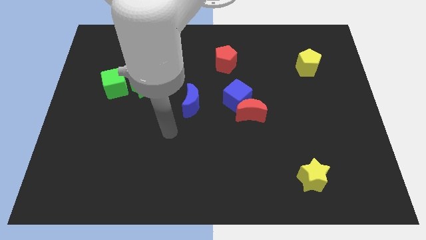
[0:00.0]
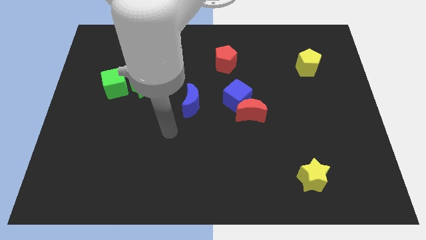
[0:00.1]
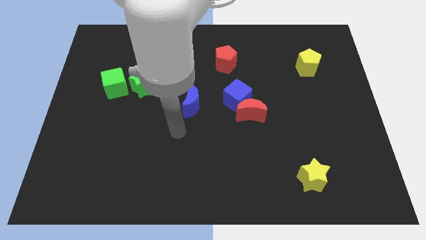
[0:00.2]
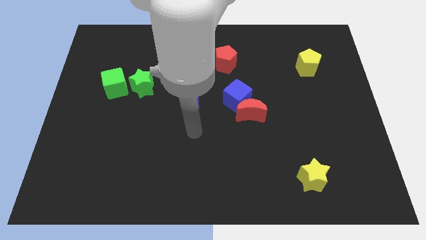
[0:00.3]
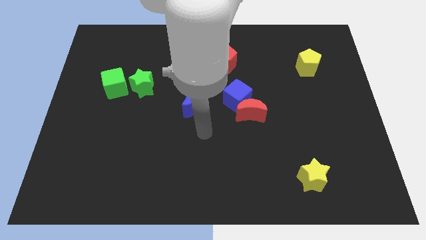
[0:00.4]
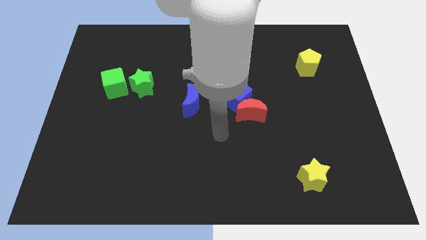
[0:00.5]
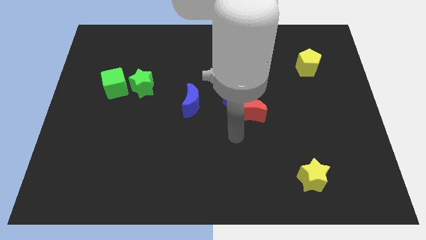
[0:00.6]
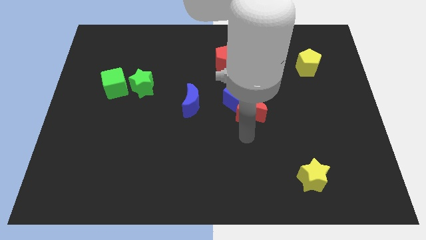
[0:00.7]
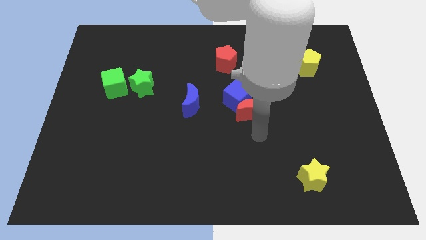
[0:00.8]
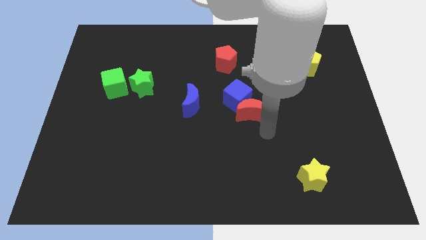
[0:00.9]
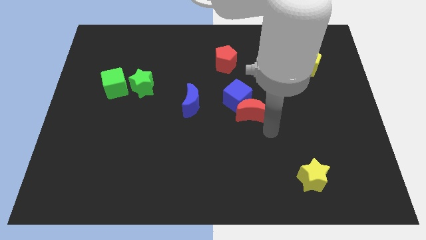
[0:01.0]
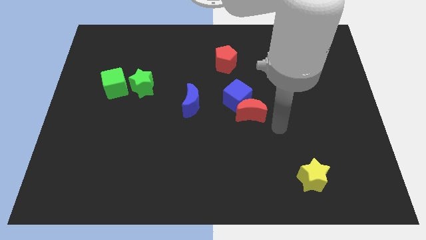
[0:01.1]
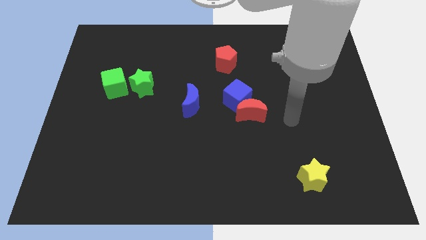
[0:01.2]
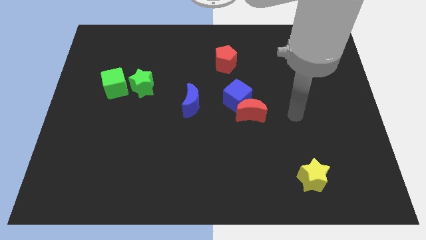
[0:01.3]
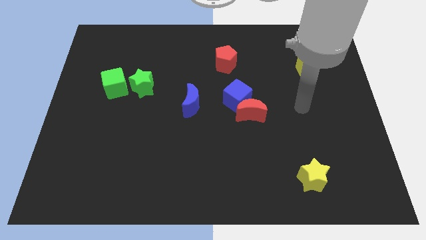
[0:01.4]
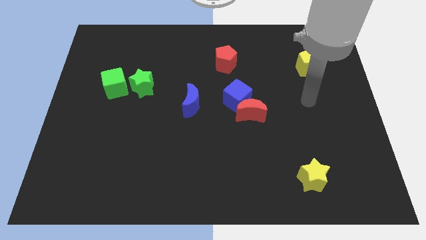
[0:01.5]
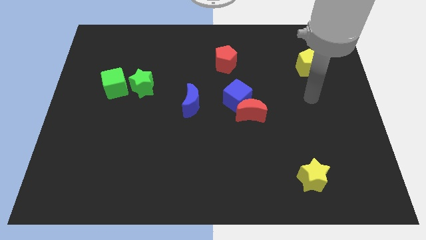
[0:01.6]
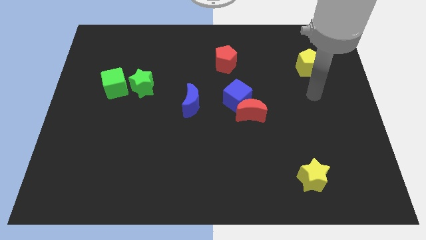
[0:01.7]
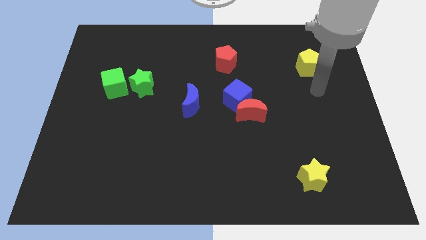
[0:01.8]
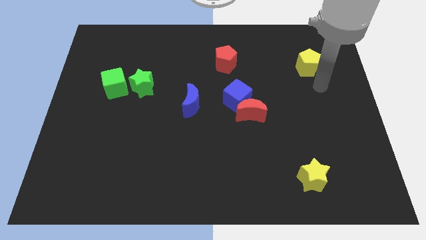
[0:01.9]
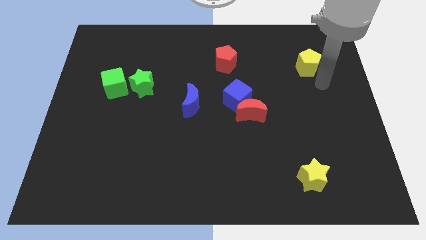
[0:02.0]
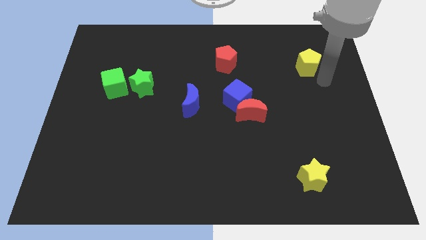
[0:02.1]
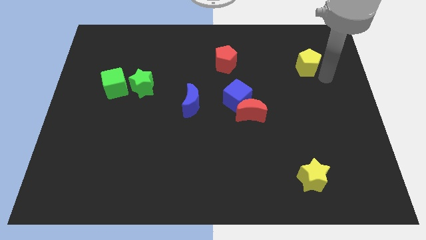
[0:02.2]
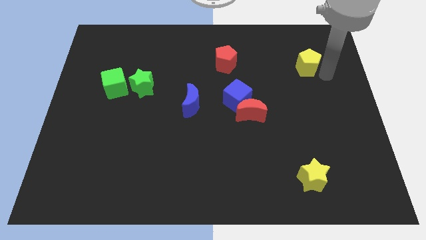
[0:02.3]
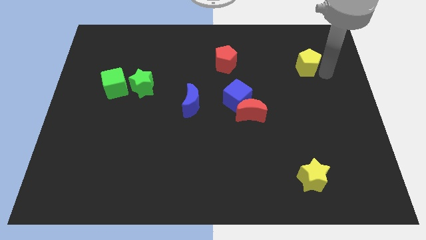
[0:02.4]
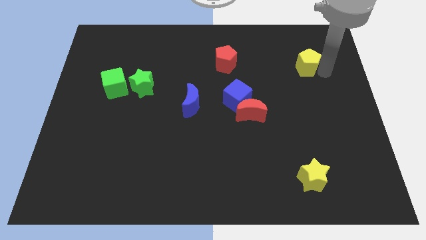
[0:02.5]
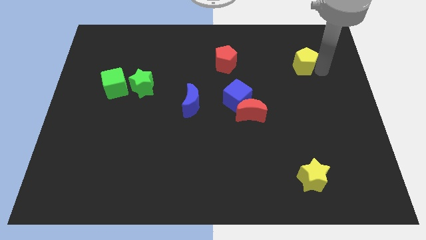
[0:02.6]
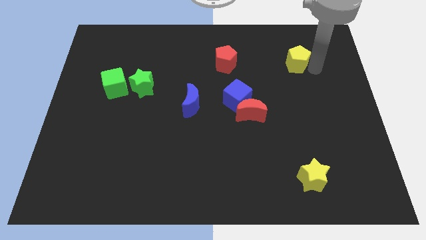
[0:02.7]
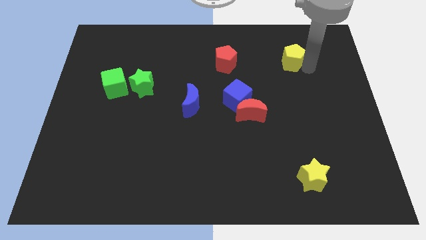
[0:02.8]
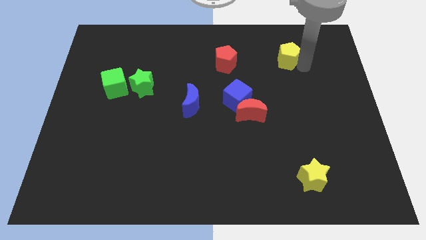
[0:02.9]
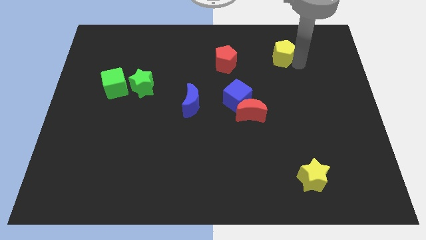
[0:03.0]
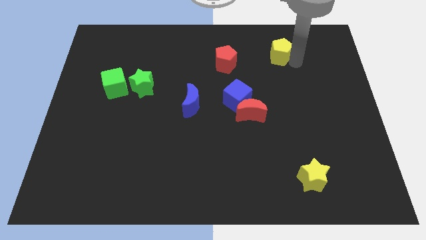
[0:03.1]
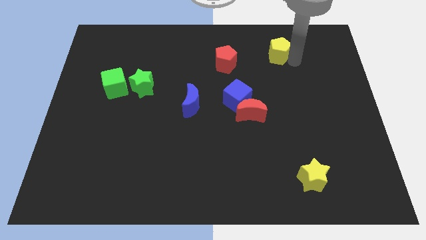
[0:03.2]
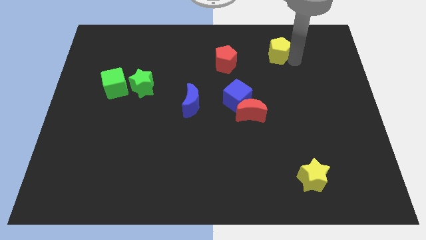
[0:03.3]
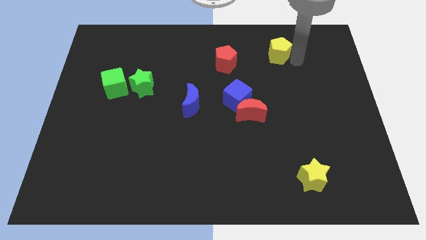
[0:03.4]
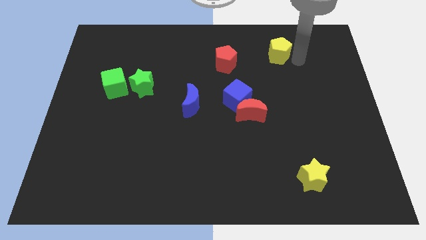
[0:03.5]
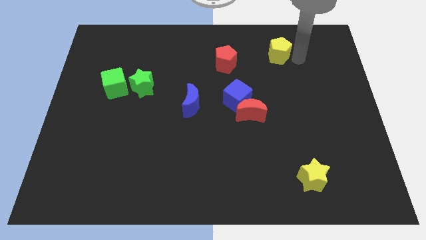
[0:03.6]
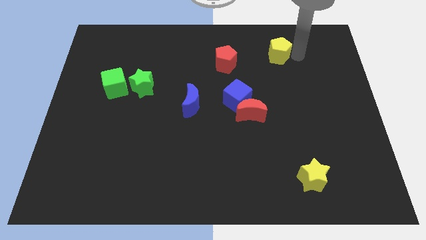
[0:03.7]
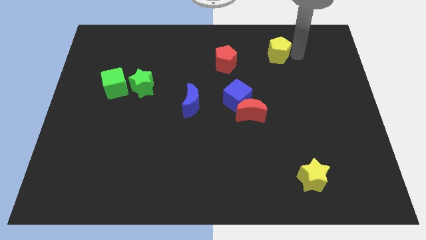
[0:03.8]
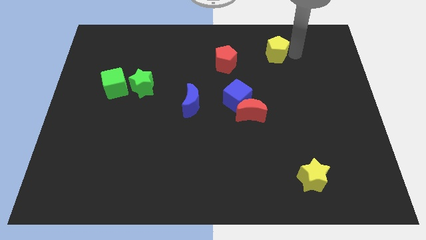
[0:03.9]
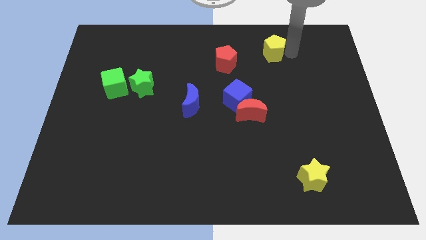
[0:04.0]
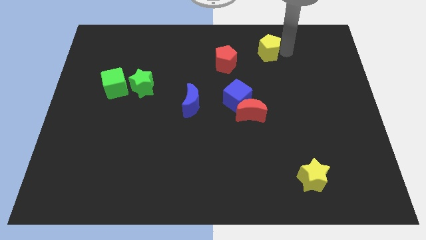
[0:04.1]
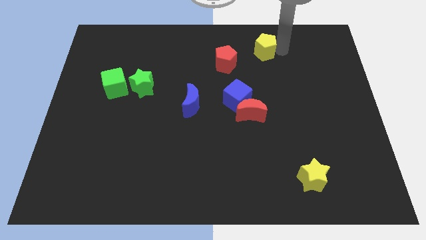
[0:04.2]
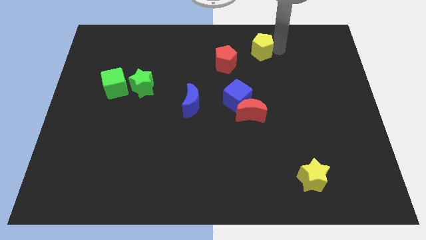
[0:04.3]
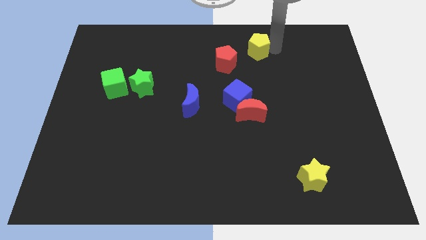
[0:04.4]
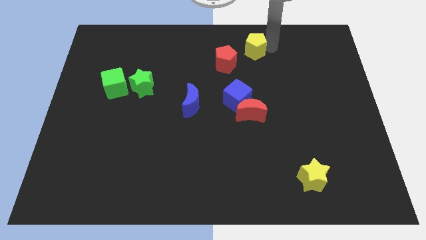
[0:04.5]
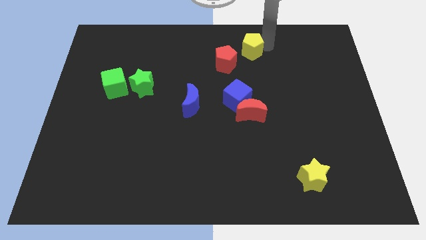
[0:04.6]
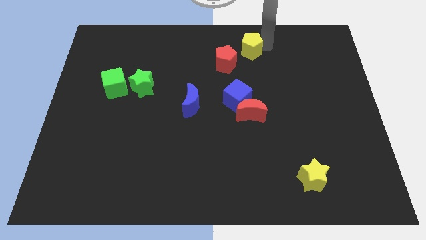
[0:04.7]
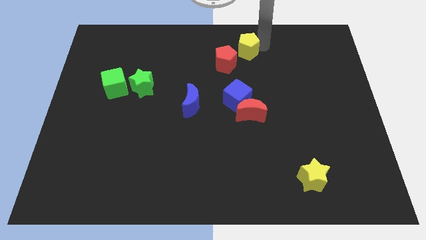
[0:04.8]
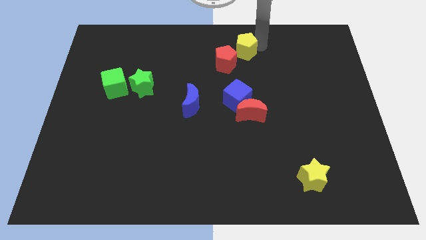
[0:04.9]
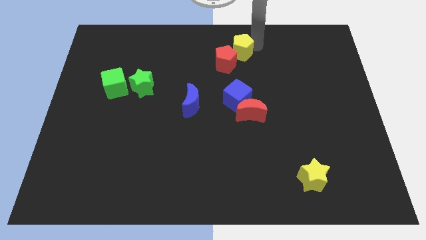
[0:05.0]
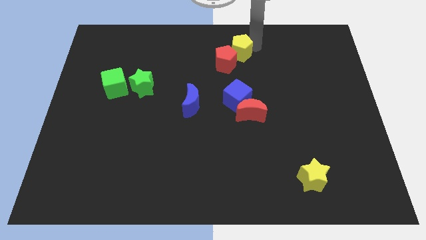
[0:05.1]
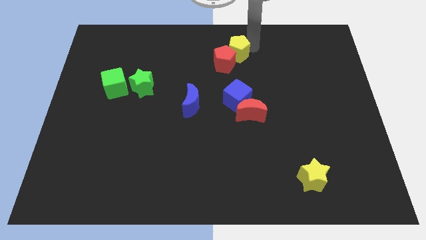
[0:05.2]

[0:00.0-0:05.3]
push the yellow pentagon to the red pentagon

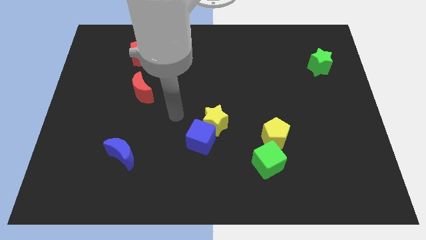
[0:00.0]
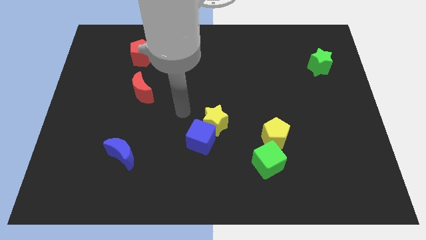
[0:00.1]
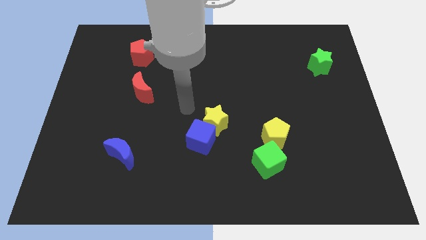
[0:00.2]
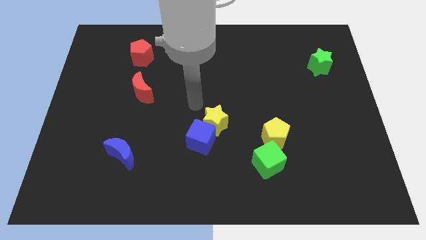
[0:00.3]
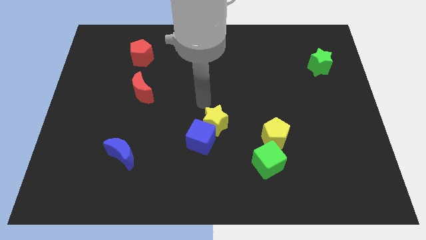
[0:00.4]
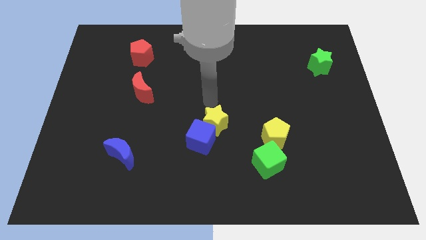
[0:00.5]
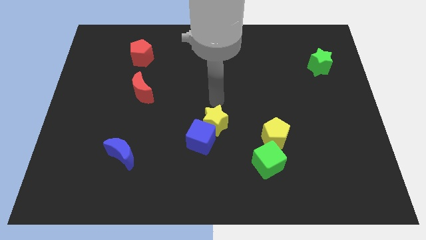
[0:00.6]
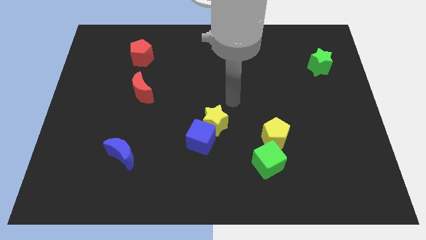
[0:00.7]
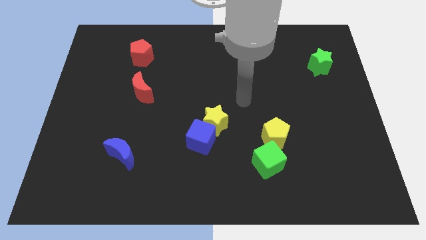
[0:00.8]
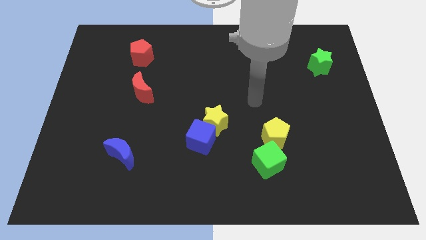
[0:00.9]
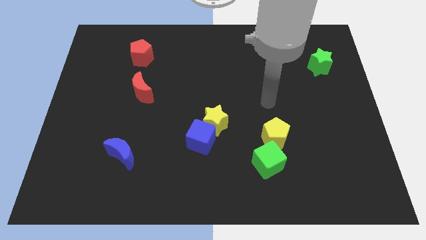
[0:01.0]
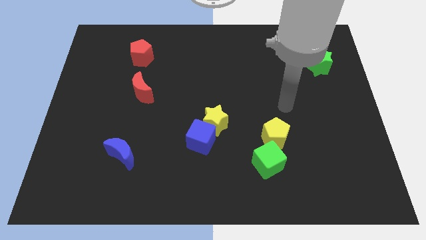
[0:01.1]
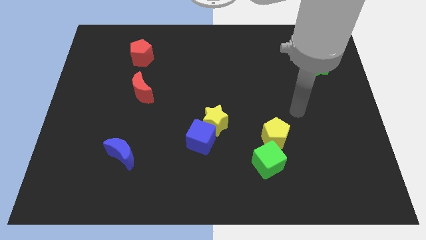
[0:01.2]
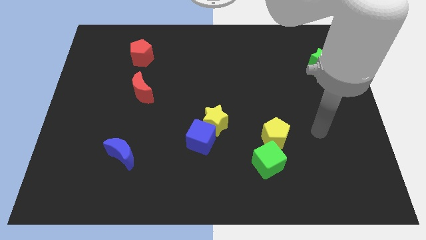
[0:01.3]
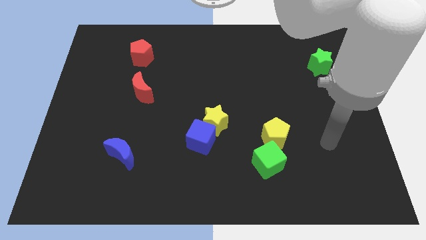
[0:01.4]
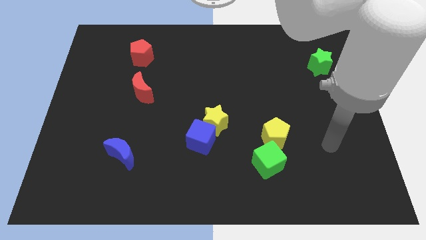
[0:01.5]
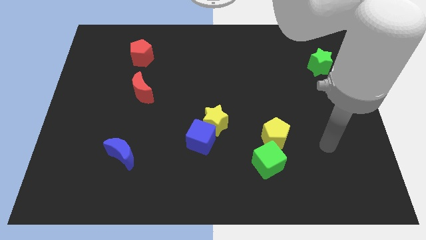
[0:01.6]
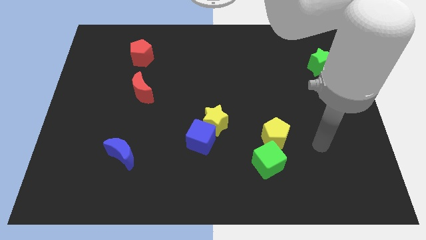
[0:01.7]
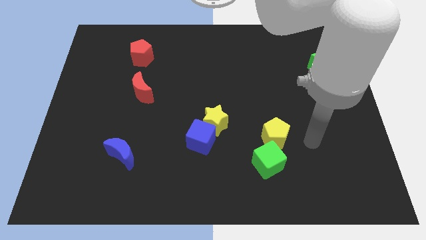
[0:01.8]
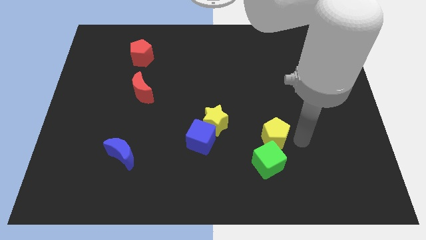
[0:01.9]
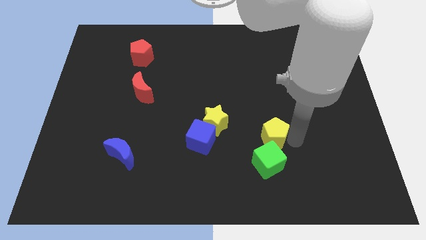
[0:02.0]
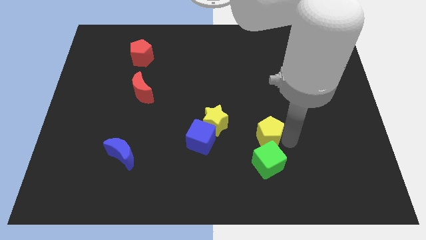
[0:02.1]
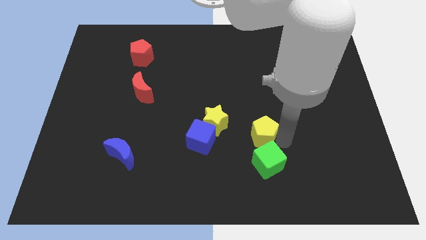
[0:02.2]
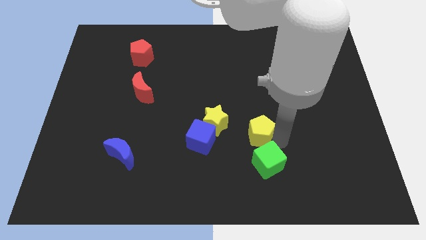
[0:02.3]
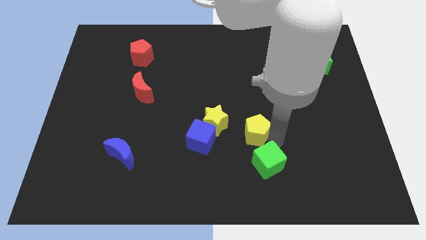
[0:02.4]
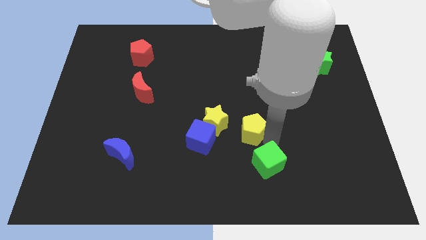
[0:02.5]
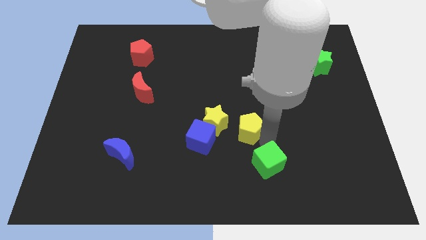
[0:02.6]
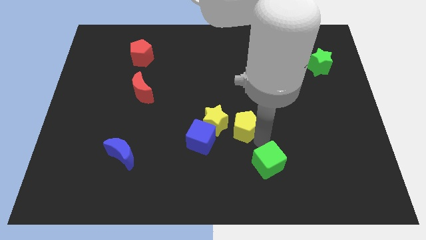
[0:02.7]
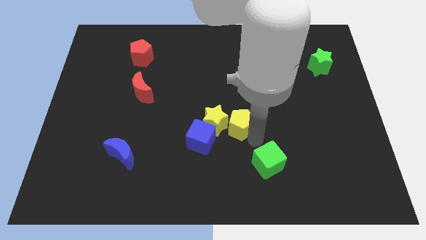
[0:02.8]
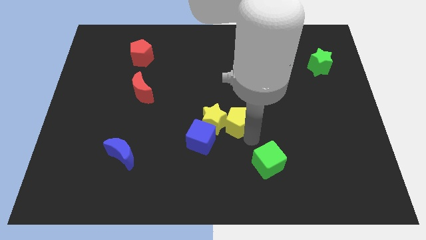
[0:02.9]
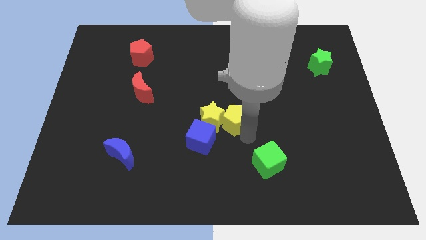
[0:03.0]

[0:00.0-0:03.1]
push the yellow pentagon close to the yellow star

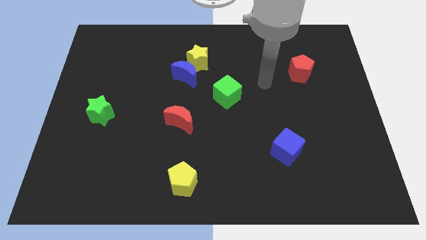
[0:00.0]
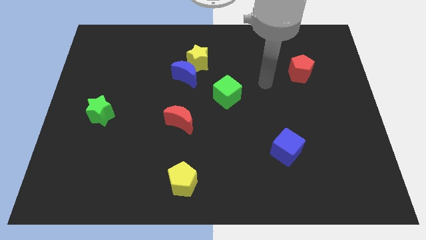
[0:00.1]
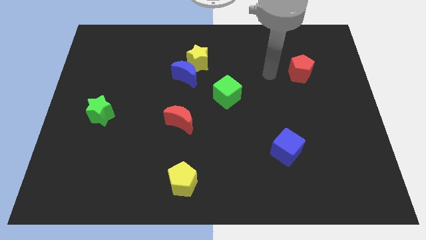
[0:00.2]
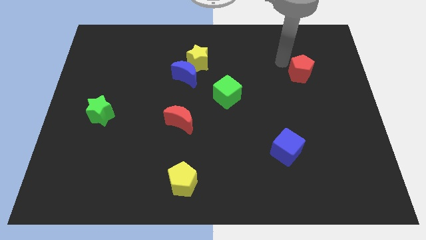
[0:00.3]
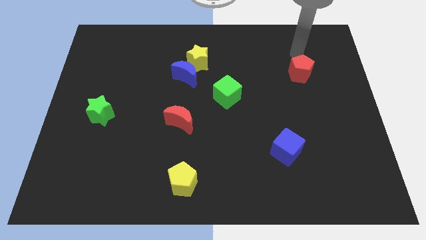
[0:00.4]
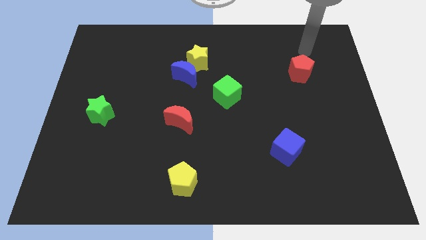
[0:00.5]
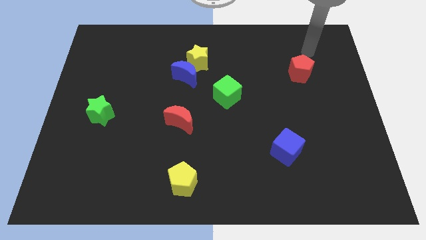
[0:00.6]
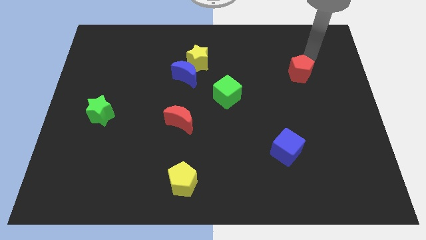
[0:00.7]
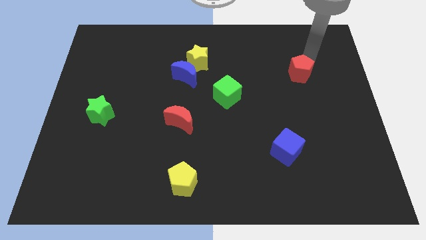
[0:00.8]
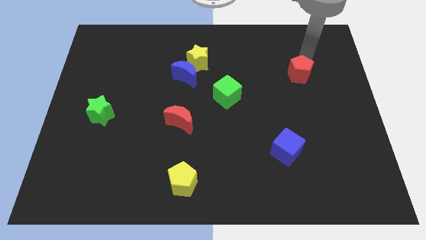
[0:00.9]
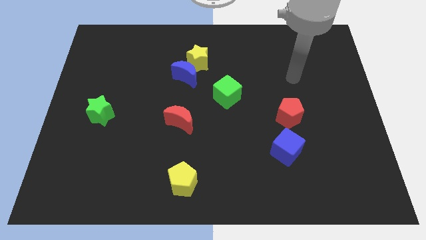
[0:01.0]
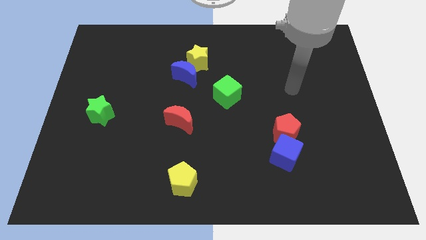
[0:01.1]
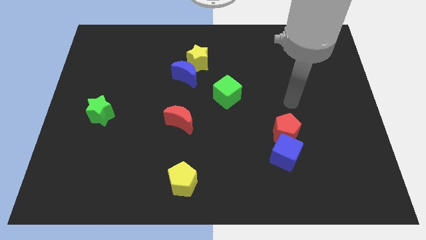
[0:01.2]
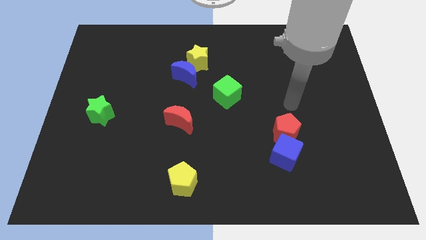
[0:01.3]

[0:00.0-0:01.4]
push the red pentagon close to the blue cube
